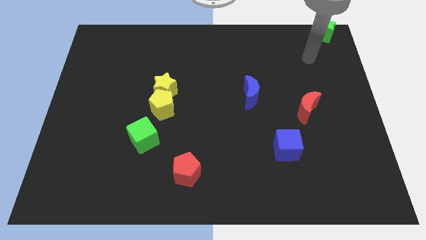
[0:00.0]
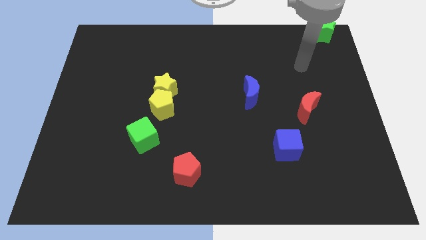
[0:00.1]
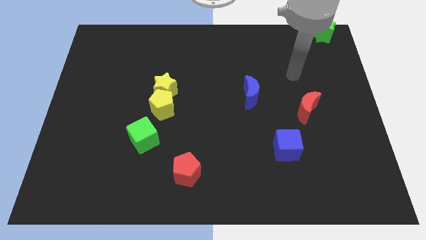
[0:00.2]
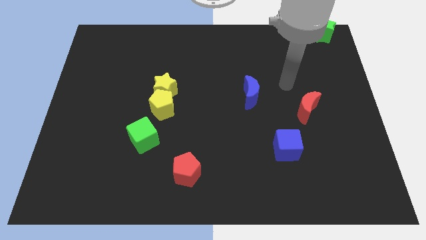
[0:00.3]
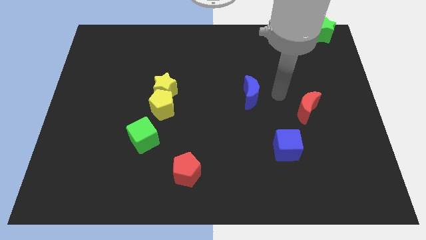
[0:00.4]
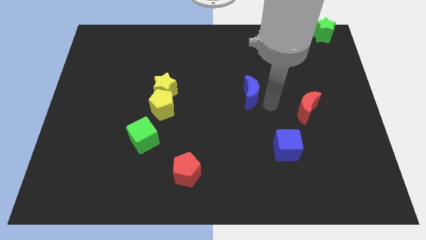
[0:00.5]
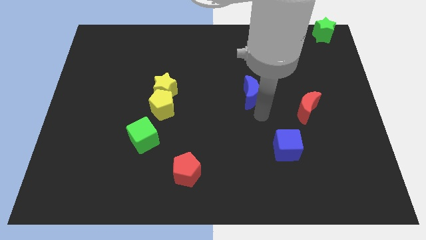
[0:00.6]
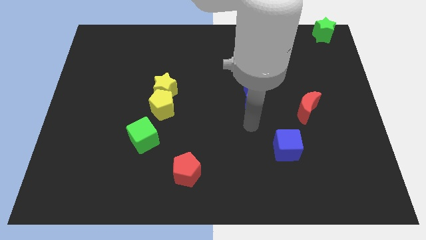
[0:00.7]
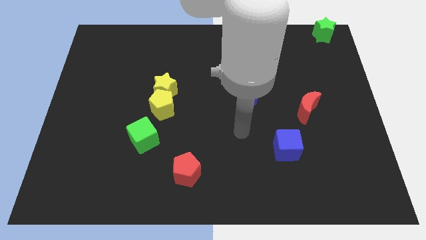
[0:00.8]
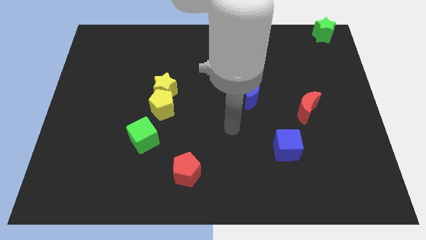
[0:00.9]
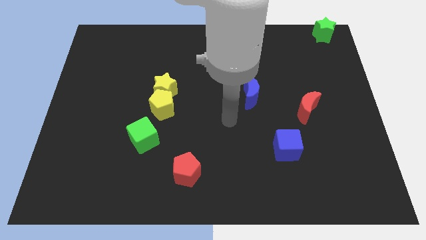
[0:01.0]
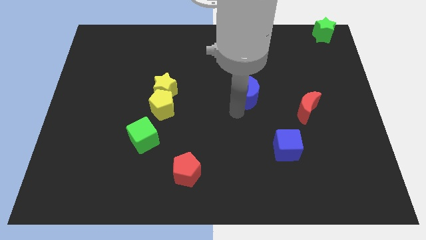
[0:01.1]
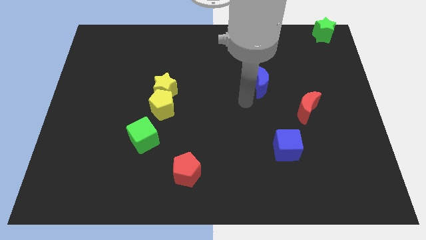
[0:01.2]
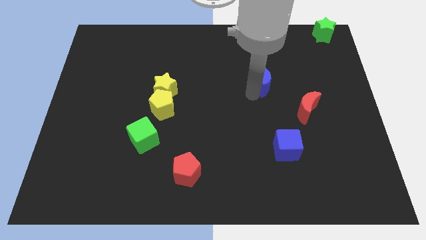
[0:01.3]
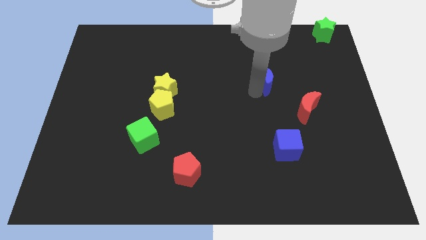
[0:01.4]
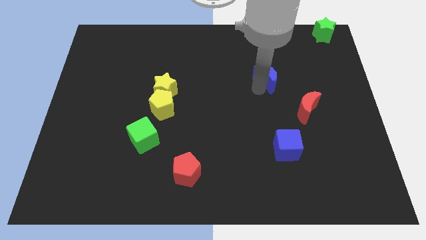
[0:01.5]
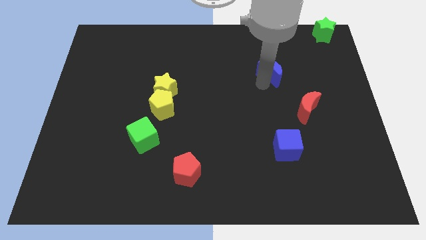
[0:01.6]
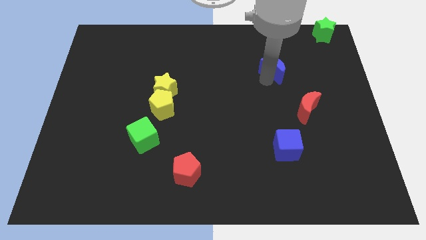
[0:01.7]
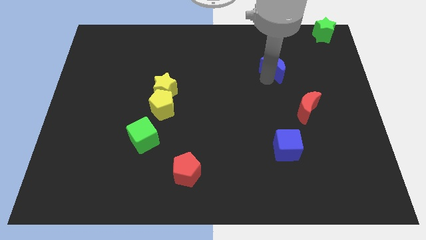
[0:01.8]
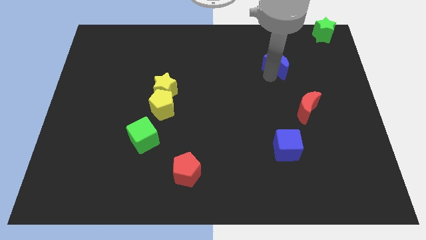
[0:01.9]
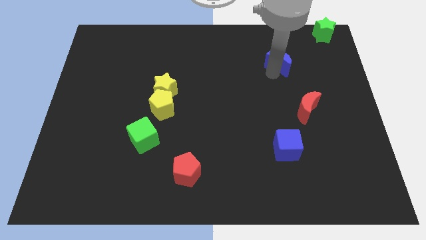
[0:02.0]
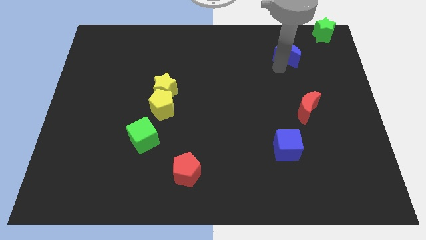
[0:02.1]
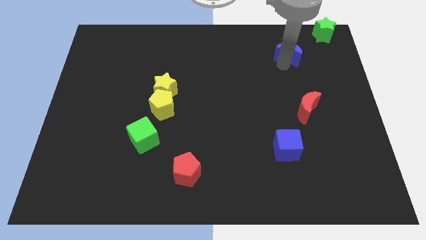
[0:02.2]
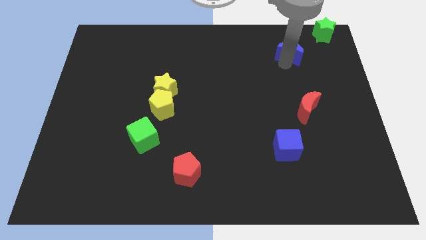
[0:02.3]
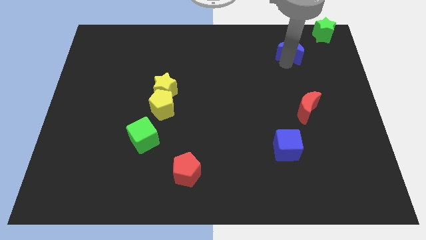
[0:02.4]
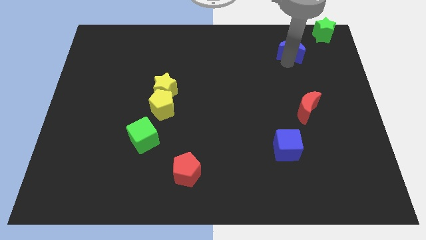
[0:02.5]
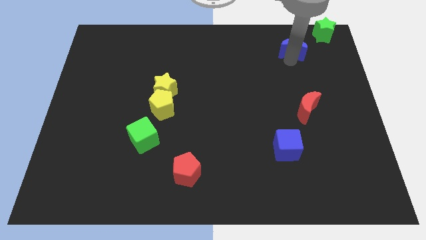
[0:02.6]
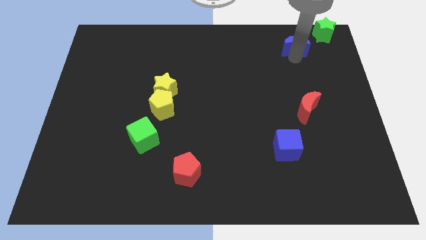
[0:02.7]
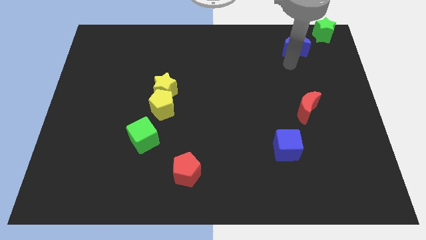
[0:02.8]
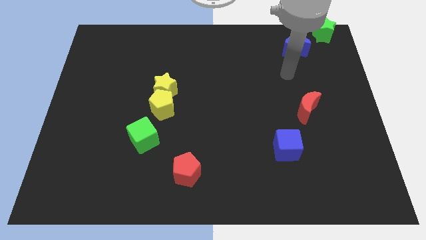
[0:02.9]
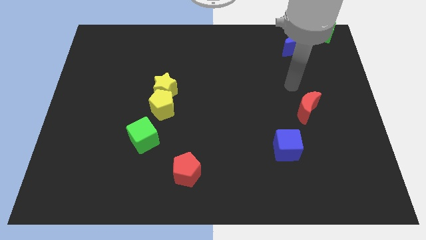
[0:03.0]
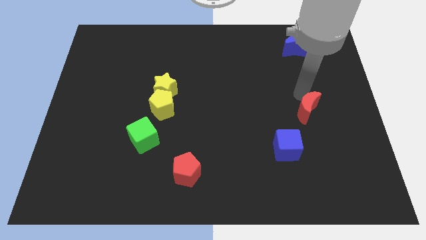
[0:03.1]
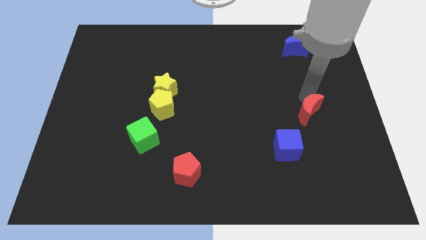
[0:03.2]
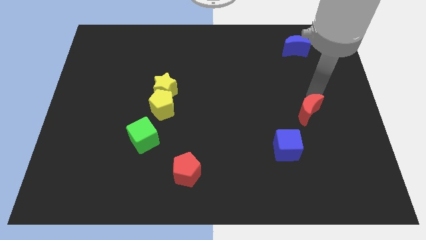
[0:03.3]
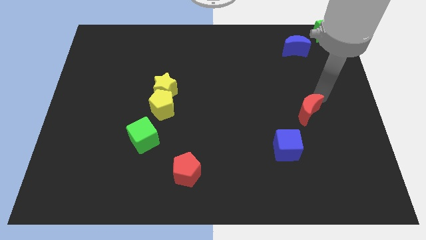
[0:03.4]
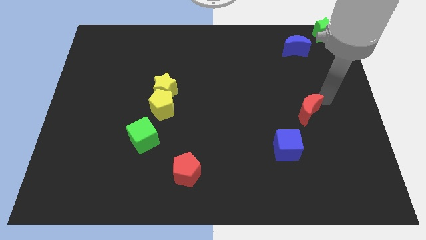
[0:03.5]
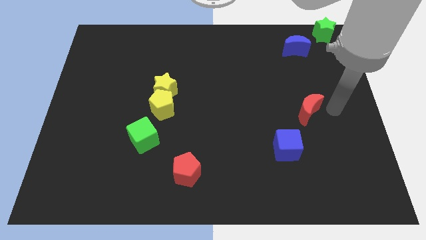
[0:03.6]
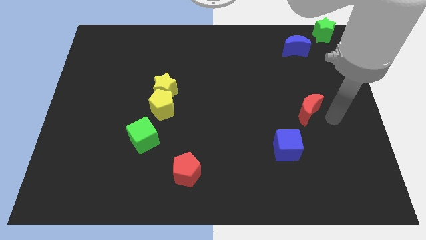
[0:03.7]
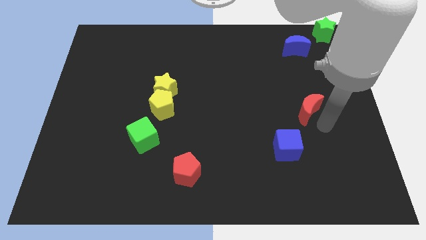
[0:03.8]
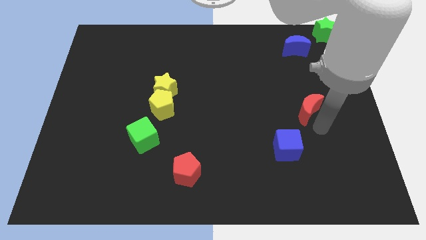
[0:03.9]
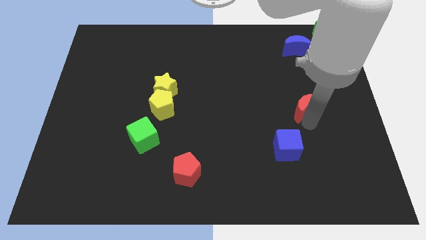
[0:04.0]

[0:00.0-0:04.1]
push the blue crescent towards top right

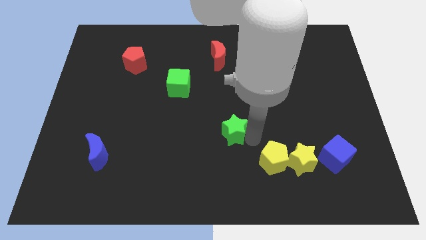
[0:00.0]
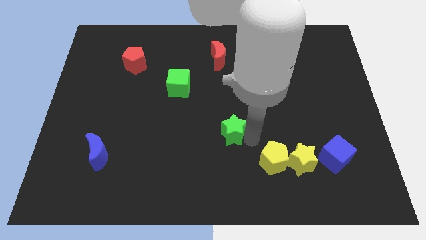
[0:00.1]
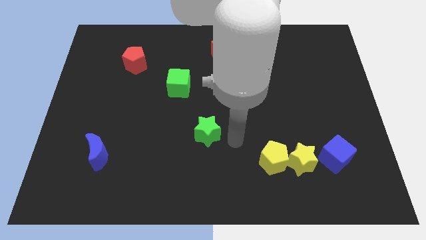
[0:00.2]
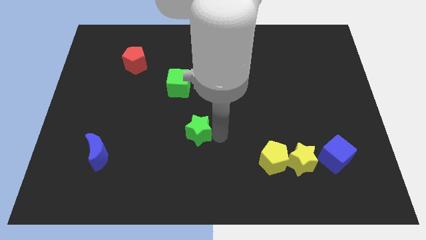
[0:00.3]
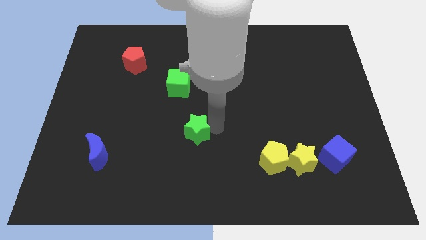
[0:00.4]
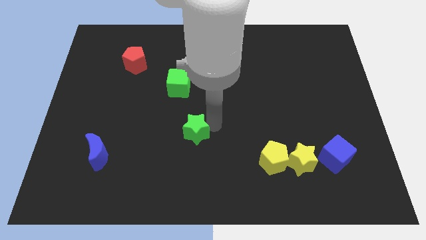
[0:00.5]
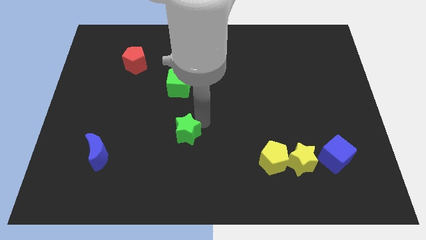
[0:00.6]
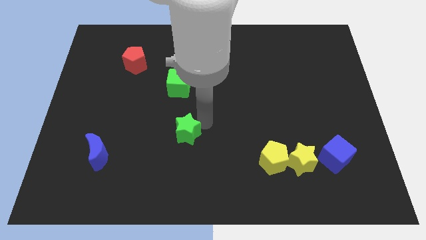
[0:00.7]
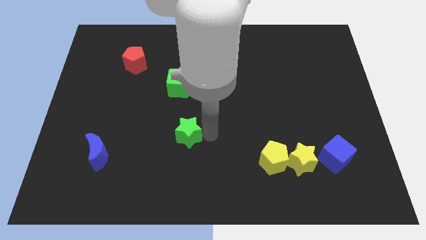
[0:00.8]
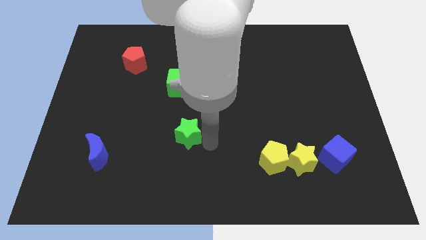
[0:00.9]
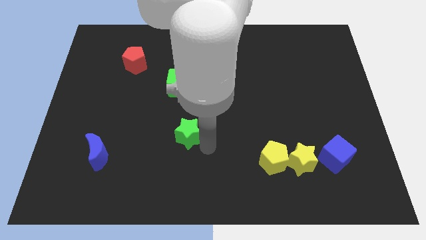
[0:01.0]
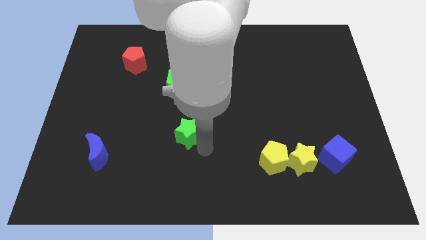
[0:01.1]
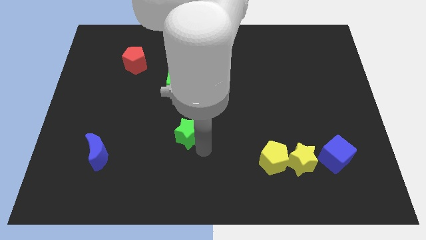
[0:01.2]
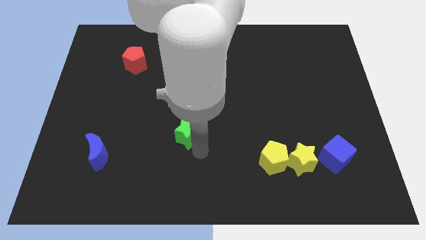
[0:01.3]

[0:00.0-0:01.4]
place the green star diagonally top right to blue moon

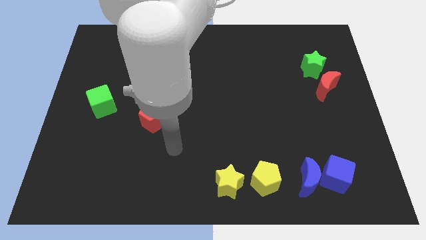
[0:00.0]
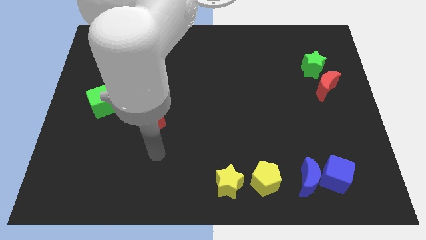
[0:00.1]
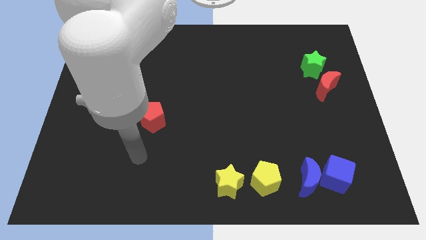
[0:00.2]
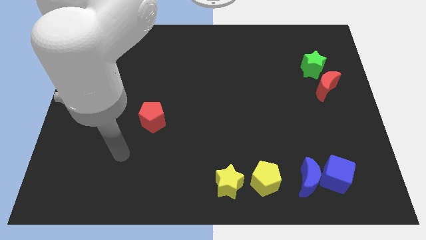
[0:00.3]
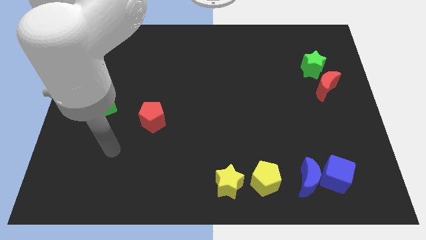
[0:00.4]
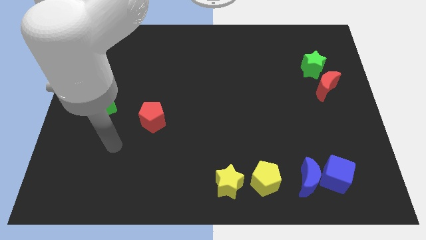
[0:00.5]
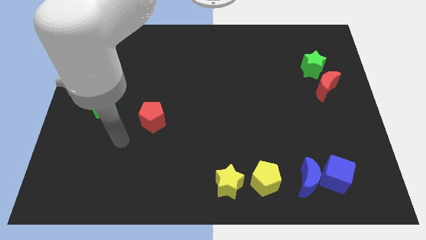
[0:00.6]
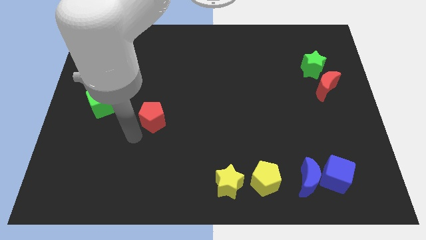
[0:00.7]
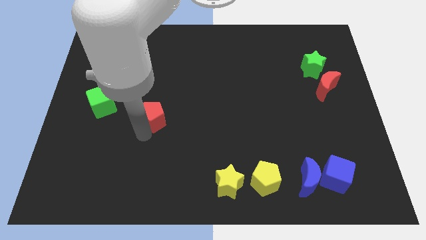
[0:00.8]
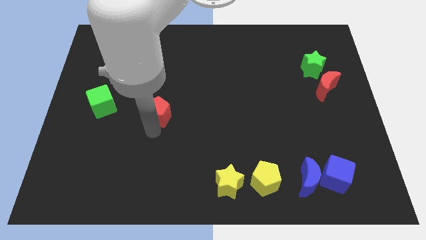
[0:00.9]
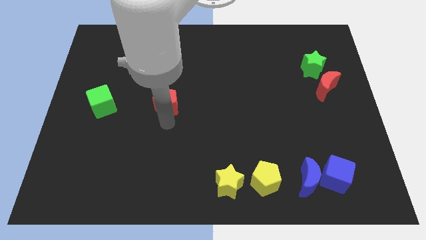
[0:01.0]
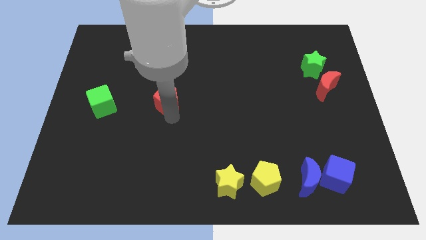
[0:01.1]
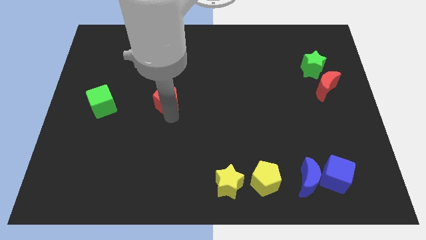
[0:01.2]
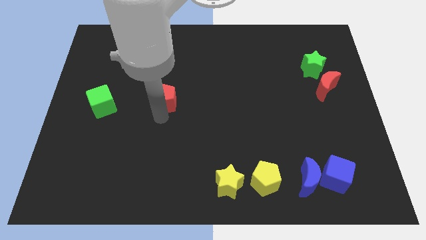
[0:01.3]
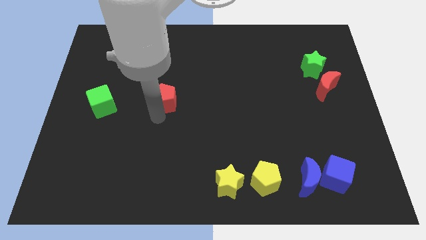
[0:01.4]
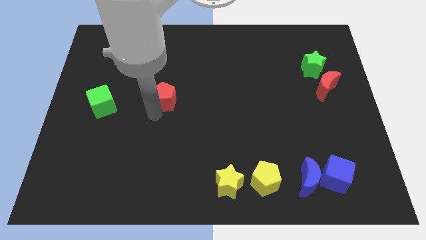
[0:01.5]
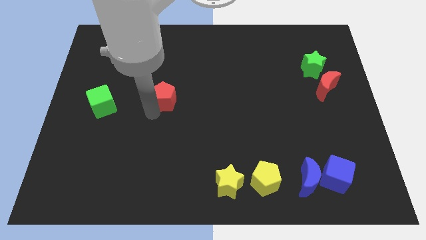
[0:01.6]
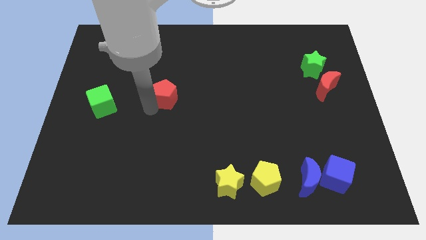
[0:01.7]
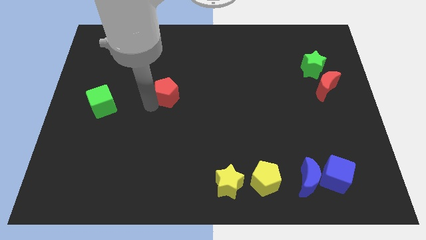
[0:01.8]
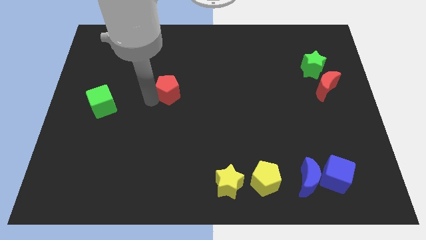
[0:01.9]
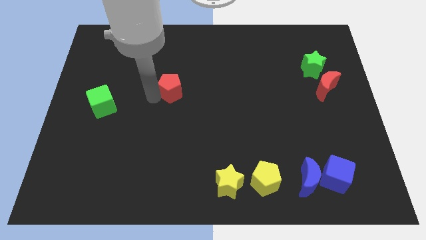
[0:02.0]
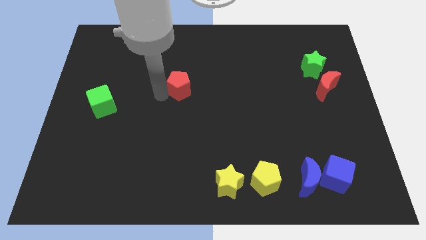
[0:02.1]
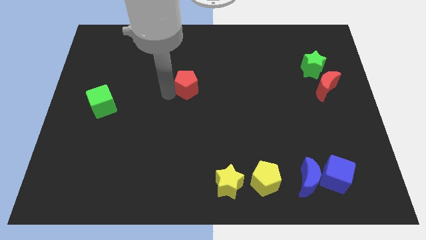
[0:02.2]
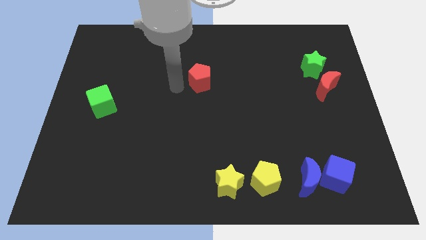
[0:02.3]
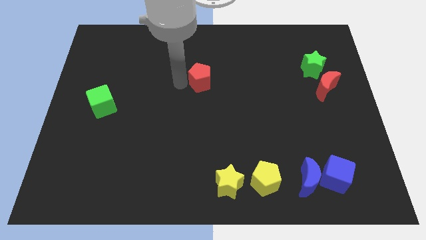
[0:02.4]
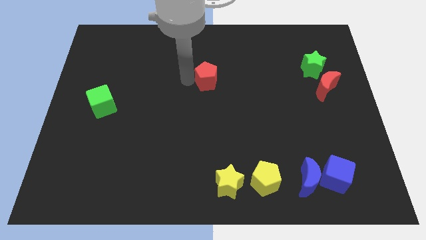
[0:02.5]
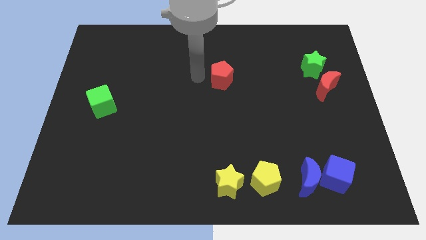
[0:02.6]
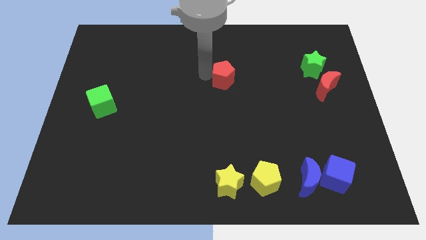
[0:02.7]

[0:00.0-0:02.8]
place red pentagon vertically above yellow star

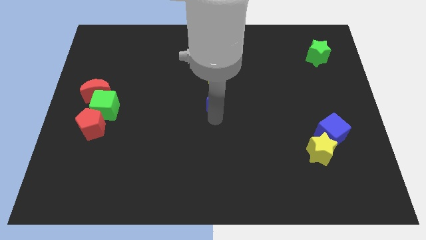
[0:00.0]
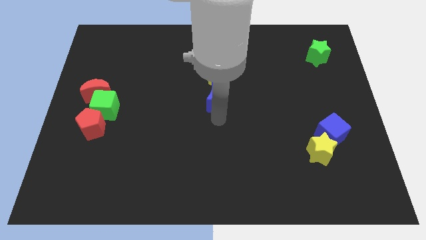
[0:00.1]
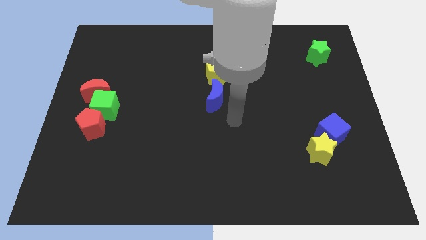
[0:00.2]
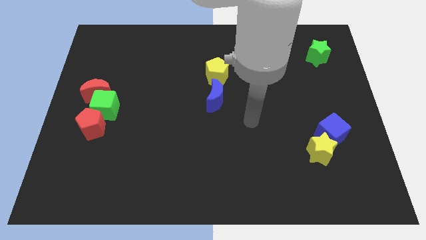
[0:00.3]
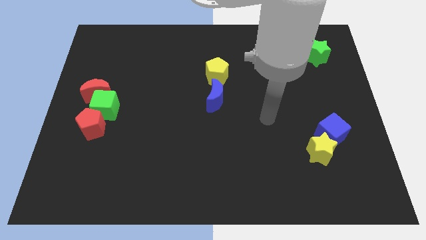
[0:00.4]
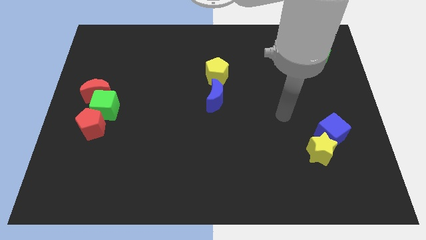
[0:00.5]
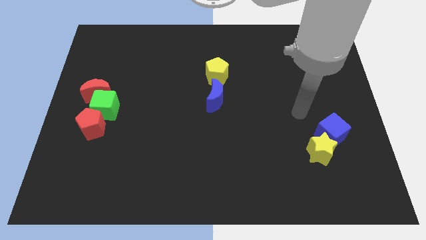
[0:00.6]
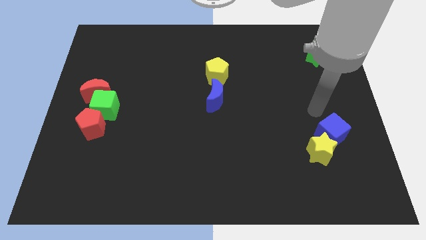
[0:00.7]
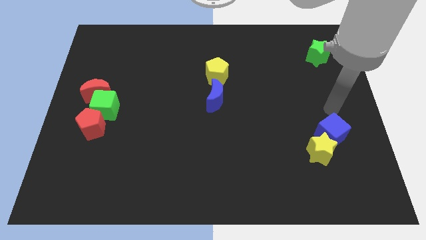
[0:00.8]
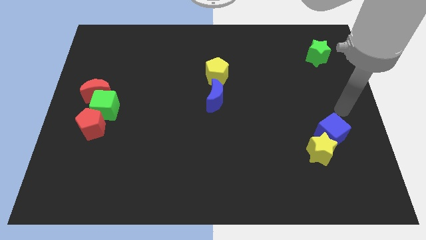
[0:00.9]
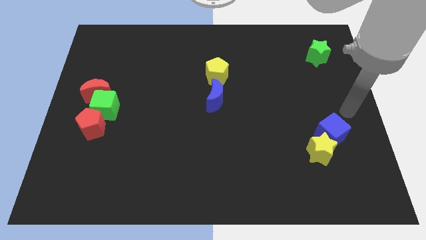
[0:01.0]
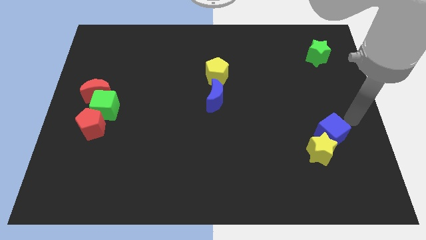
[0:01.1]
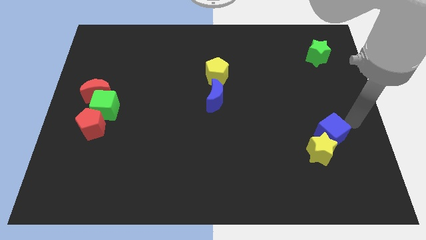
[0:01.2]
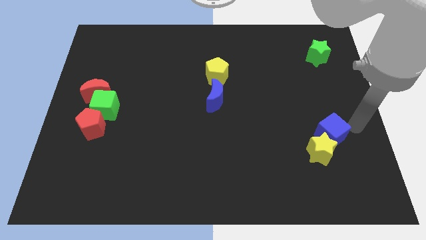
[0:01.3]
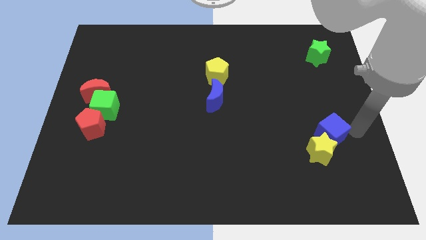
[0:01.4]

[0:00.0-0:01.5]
point your arm at the right of the blue cube
